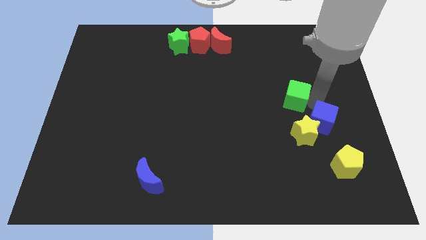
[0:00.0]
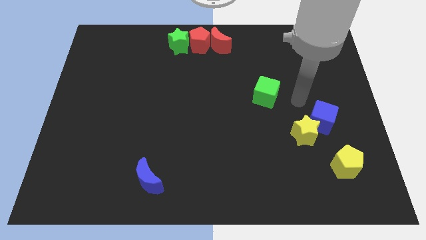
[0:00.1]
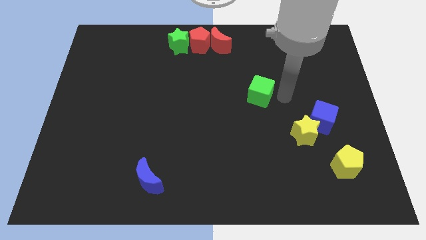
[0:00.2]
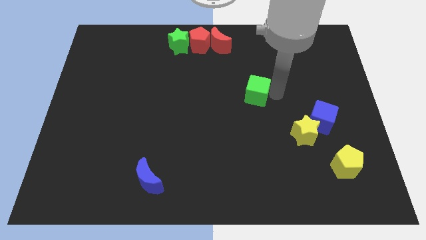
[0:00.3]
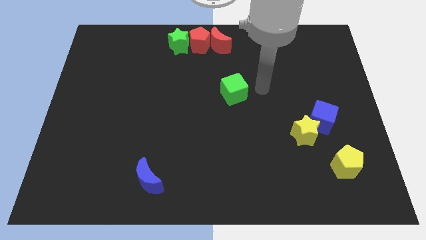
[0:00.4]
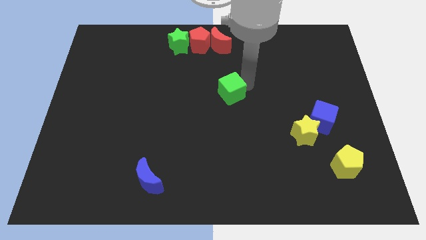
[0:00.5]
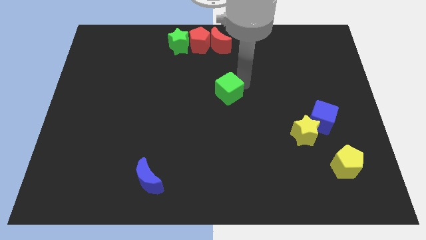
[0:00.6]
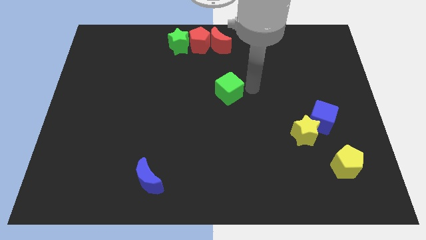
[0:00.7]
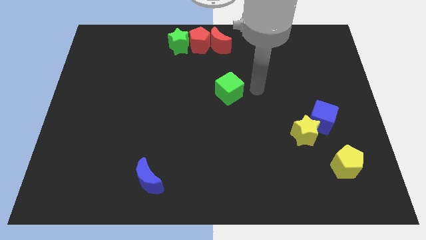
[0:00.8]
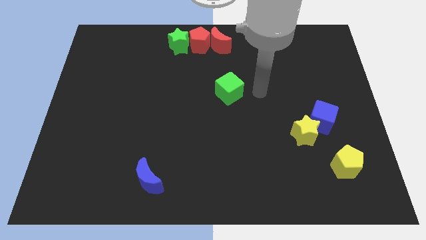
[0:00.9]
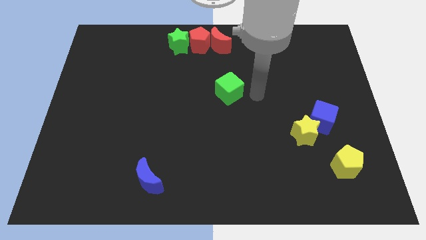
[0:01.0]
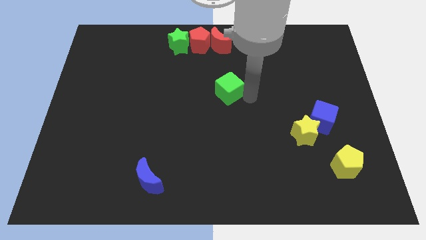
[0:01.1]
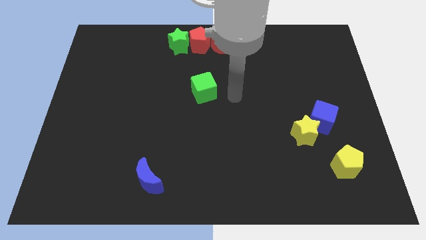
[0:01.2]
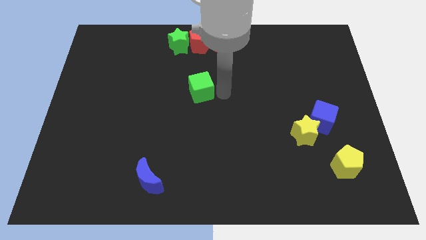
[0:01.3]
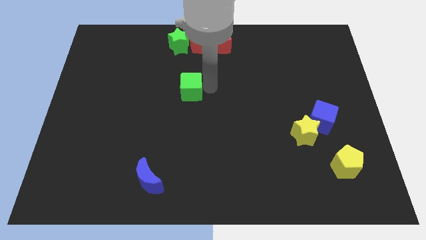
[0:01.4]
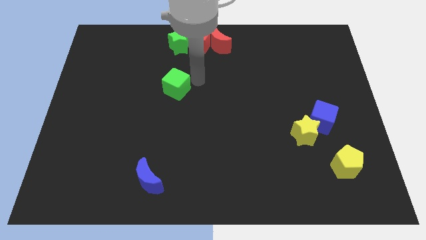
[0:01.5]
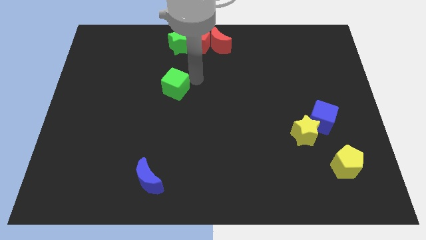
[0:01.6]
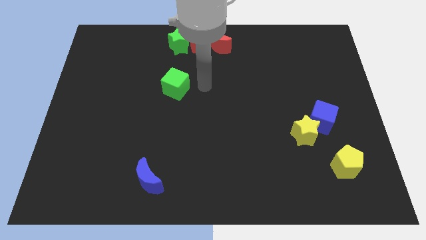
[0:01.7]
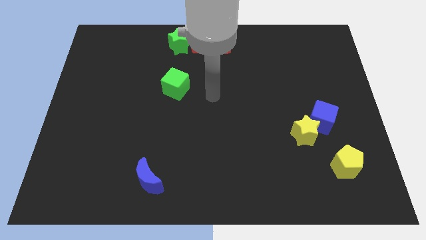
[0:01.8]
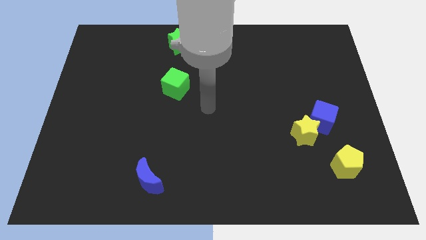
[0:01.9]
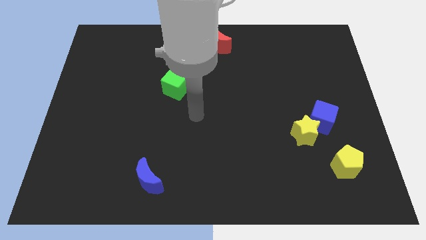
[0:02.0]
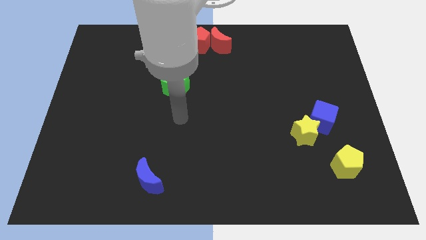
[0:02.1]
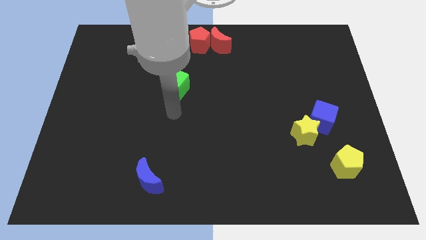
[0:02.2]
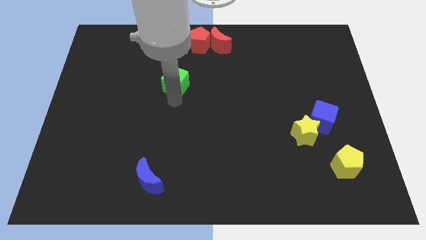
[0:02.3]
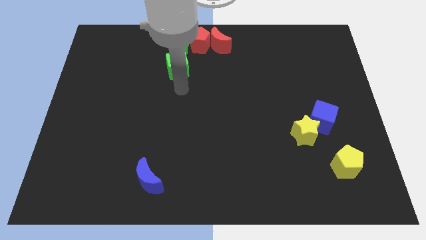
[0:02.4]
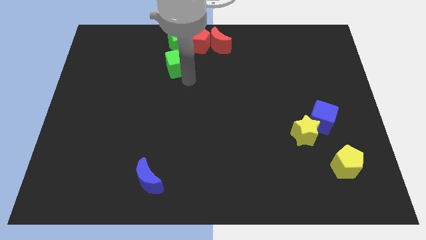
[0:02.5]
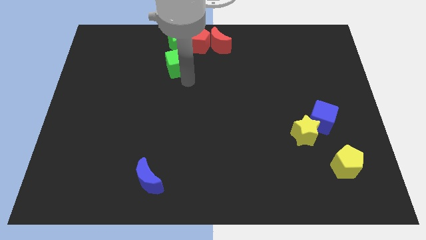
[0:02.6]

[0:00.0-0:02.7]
push the green cube below the green star

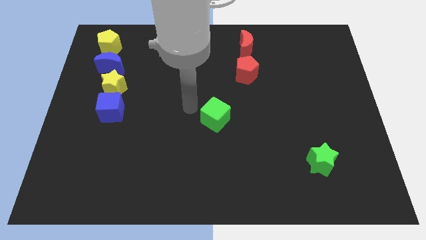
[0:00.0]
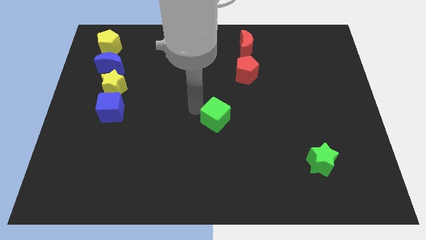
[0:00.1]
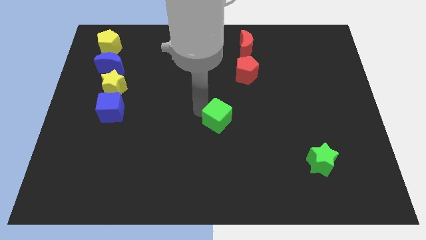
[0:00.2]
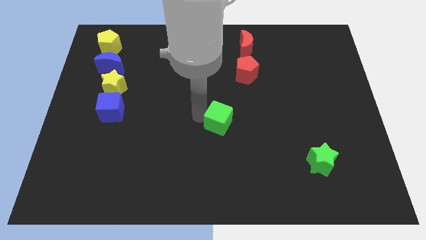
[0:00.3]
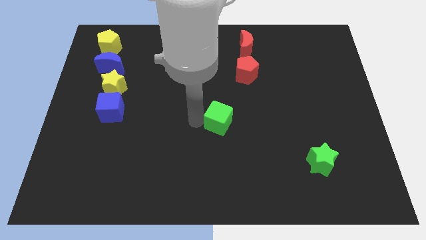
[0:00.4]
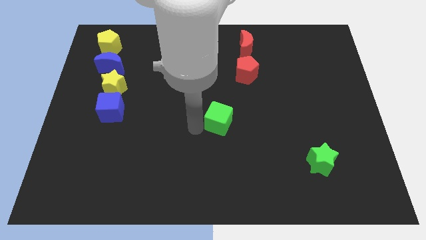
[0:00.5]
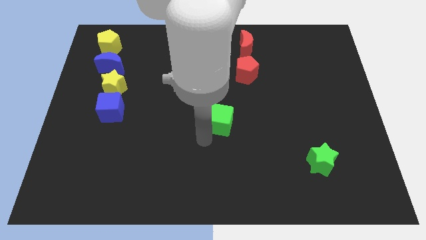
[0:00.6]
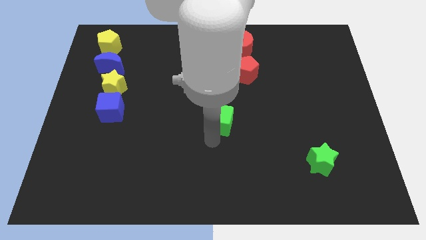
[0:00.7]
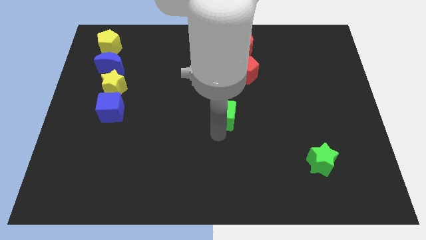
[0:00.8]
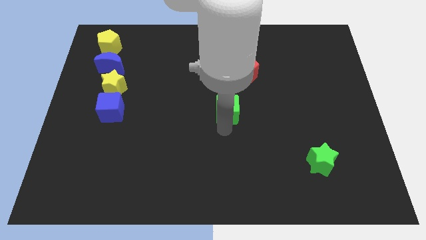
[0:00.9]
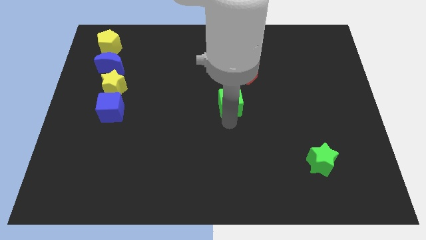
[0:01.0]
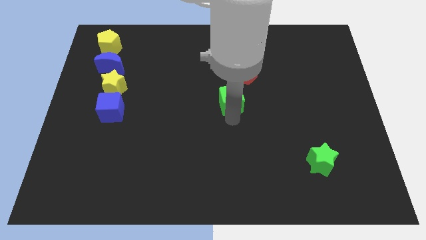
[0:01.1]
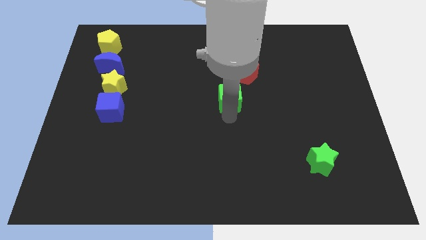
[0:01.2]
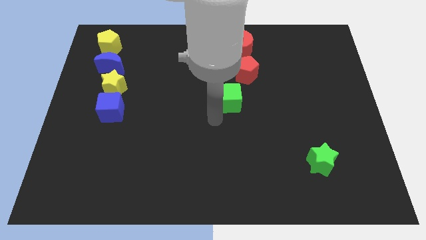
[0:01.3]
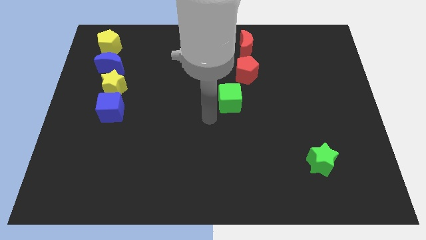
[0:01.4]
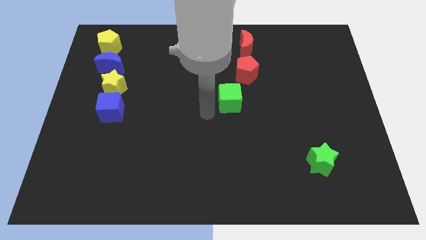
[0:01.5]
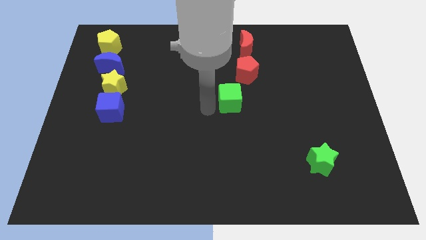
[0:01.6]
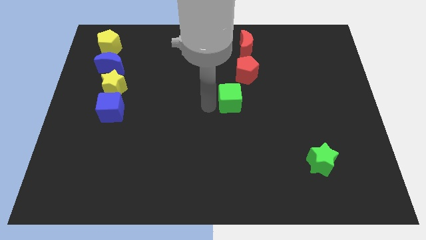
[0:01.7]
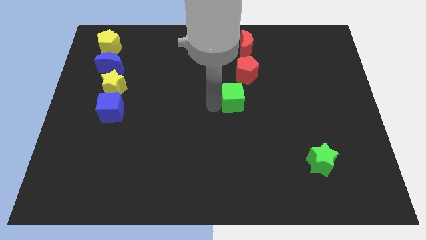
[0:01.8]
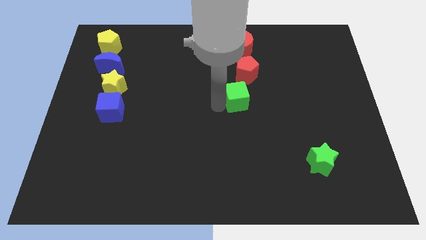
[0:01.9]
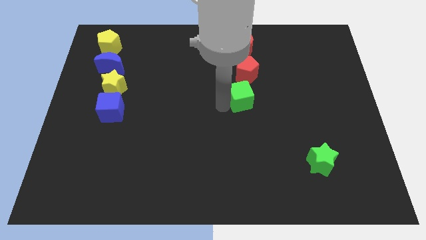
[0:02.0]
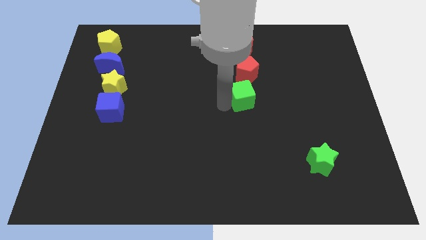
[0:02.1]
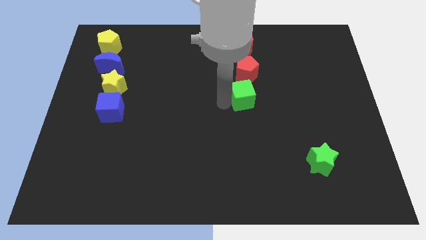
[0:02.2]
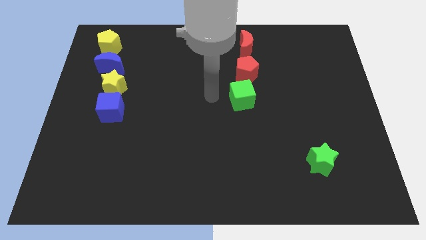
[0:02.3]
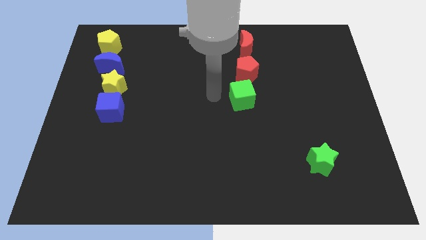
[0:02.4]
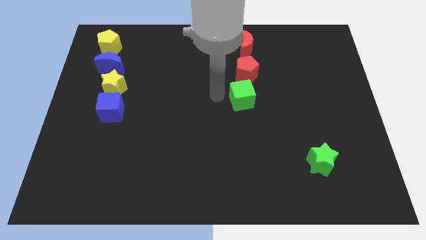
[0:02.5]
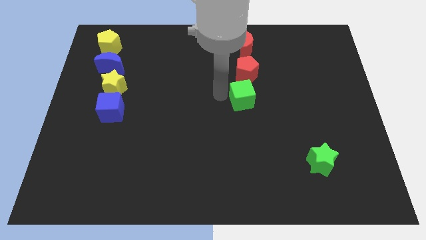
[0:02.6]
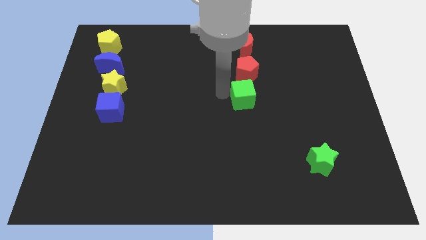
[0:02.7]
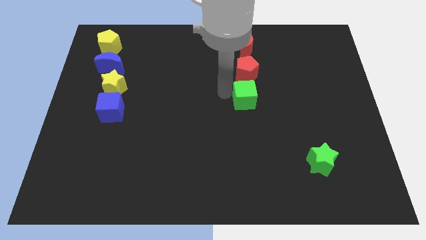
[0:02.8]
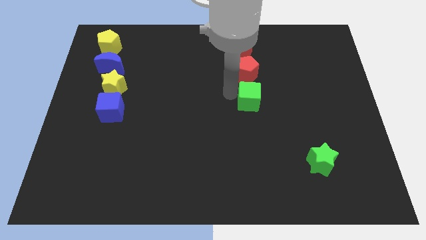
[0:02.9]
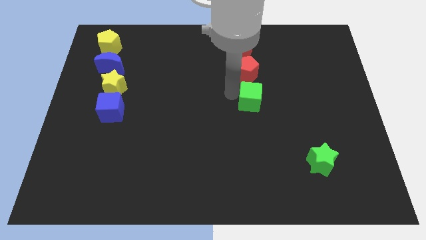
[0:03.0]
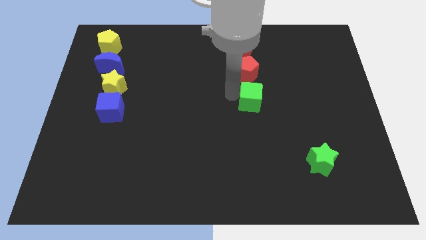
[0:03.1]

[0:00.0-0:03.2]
place the green cube below the red pentagon

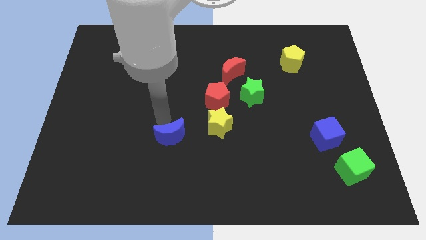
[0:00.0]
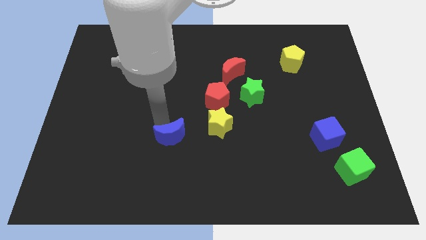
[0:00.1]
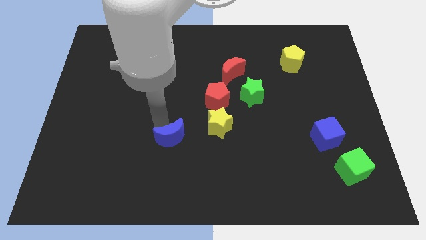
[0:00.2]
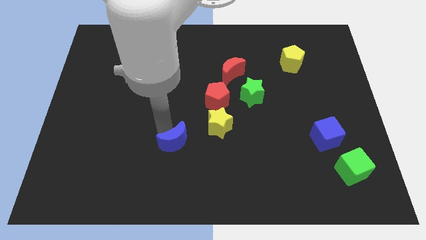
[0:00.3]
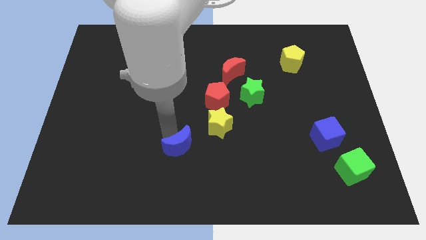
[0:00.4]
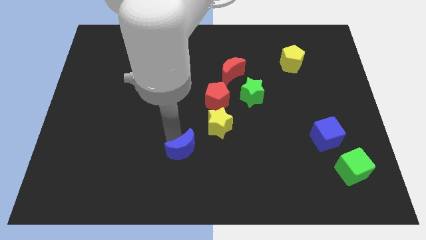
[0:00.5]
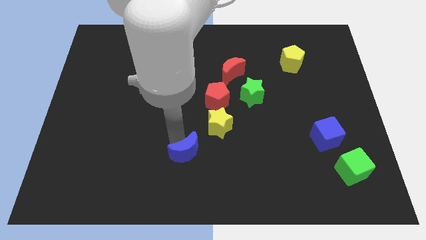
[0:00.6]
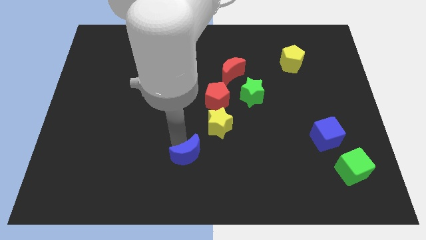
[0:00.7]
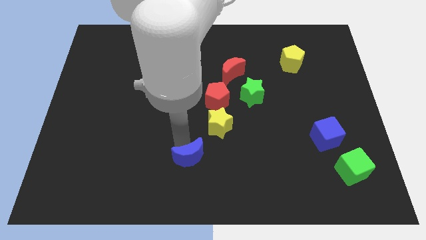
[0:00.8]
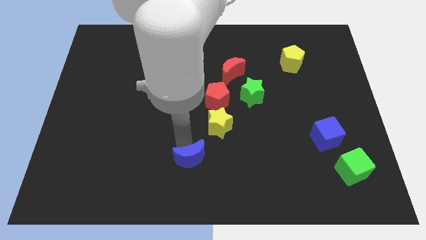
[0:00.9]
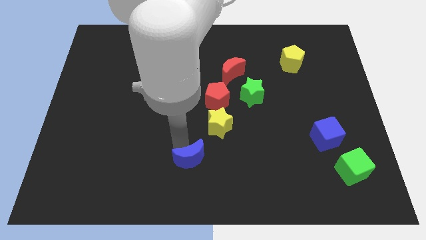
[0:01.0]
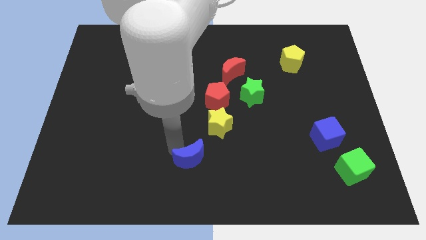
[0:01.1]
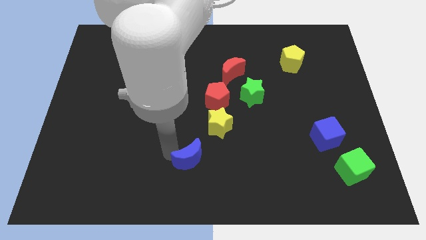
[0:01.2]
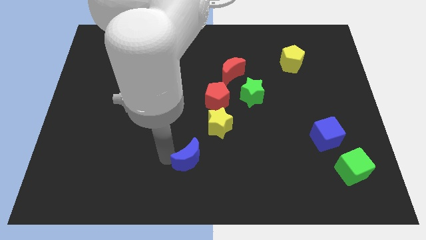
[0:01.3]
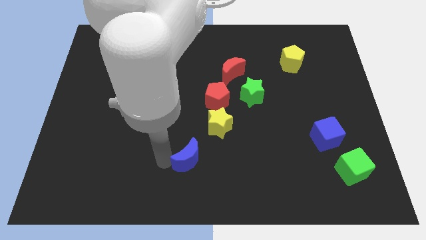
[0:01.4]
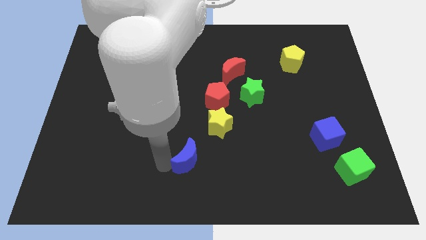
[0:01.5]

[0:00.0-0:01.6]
put the blue moon diagonally on the bottom left side of the yellow star

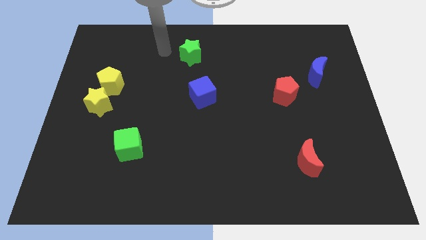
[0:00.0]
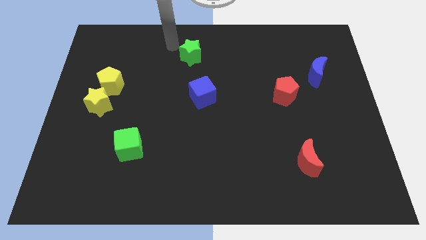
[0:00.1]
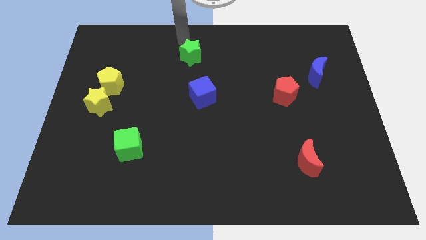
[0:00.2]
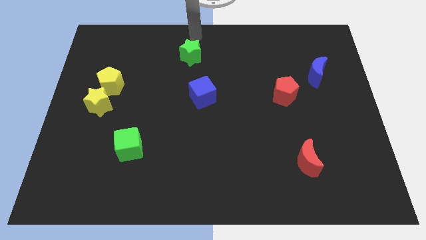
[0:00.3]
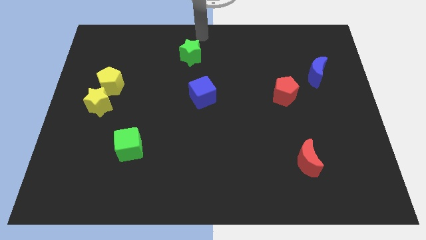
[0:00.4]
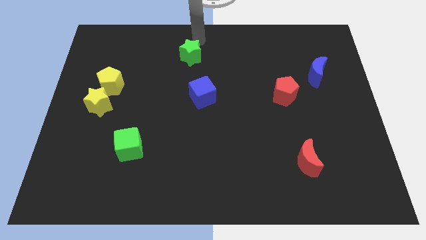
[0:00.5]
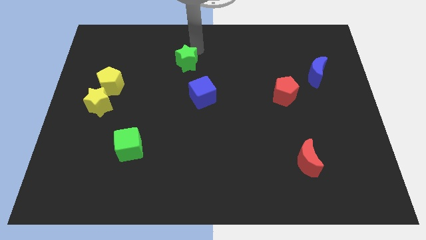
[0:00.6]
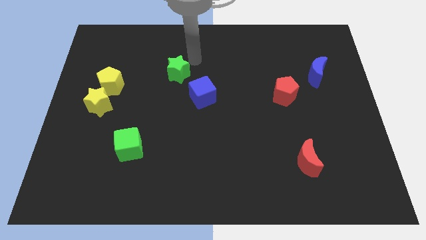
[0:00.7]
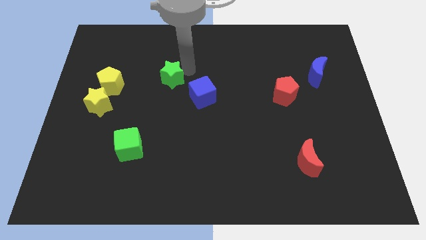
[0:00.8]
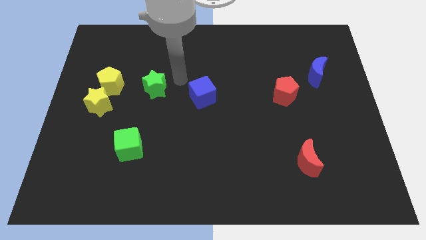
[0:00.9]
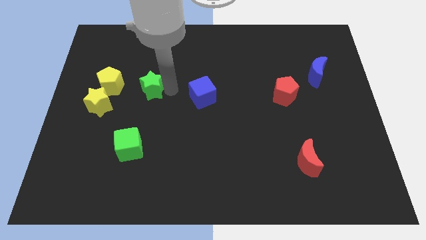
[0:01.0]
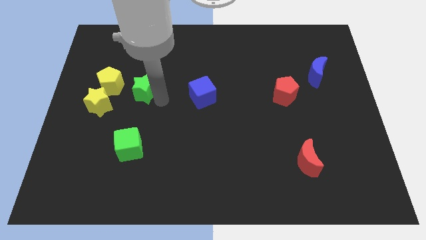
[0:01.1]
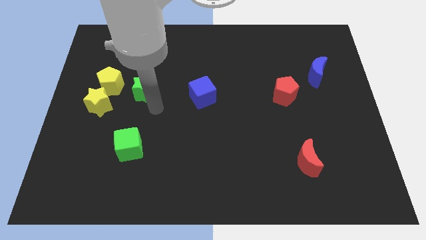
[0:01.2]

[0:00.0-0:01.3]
put the green star in between the yellow pentagon and blue cube
